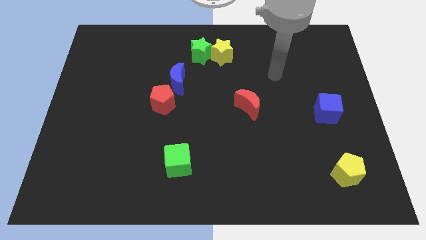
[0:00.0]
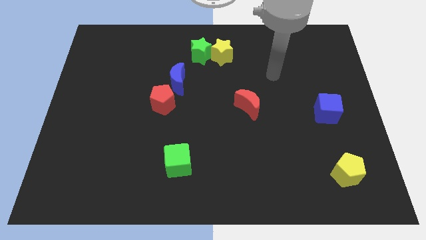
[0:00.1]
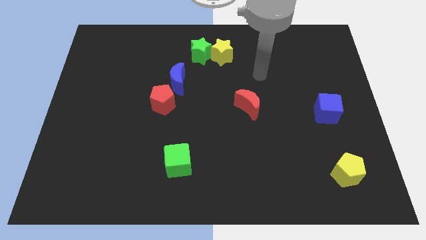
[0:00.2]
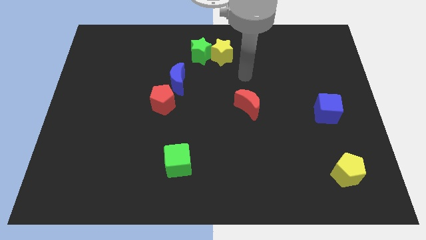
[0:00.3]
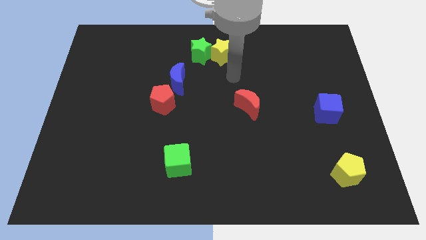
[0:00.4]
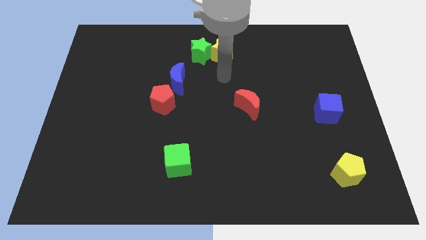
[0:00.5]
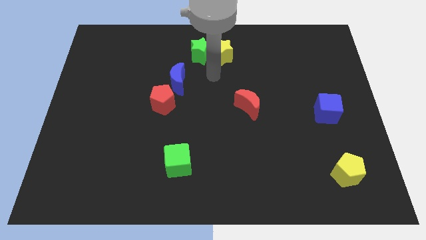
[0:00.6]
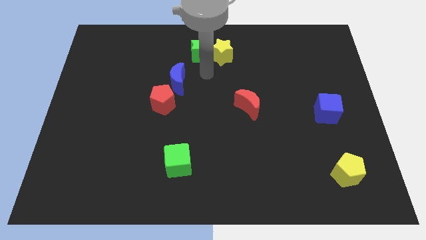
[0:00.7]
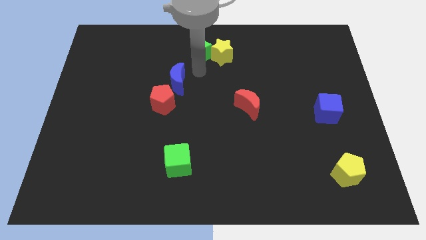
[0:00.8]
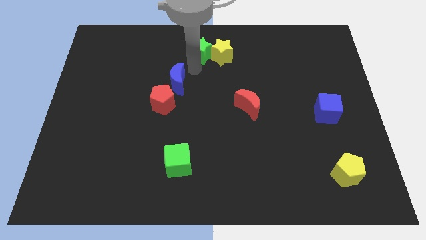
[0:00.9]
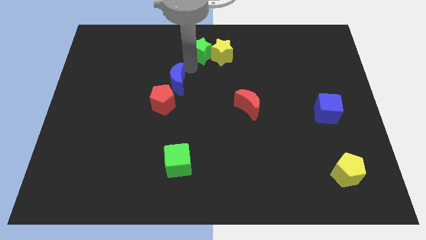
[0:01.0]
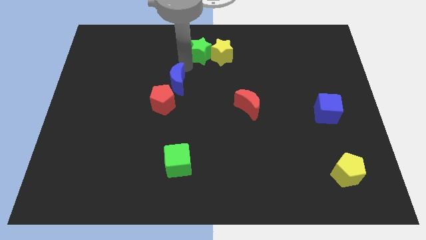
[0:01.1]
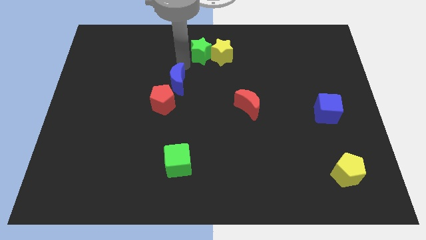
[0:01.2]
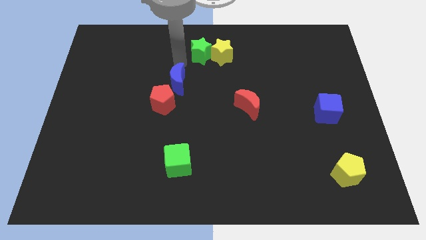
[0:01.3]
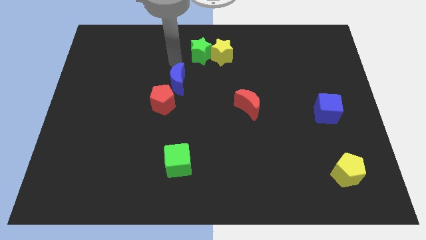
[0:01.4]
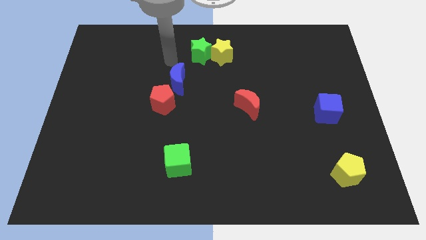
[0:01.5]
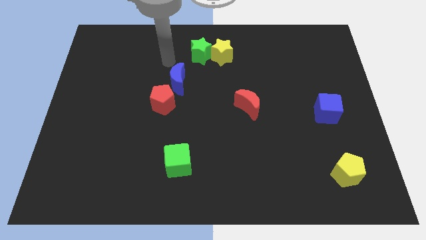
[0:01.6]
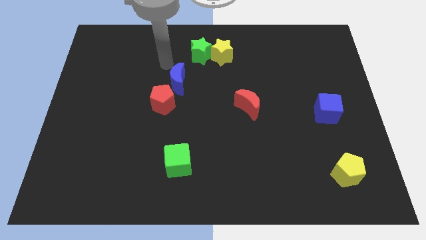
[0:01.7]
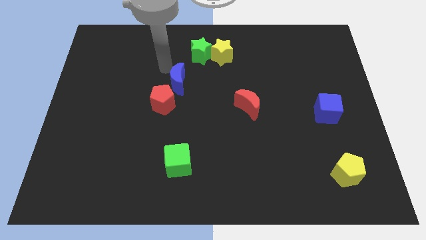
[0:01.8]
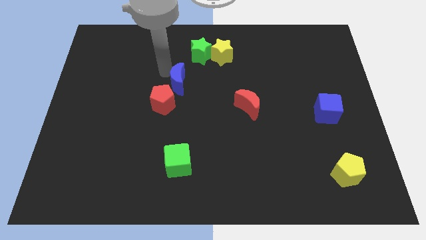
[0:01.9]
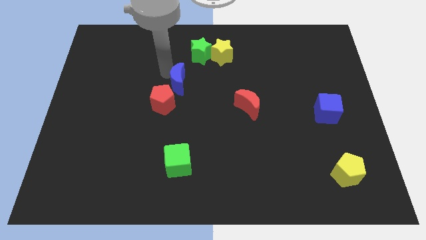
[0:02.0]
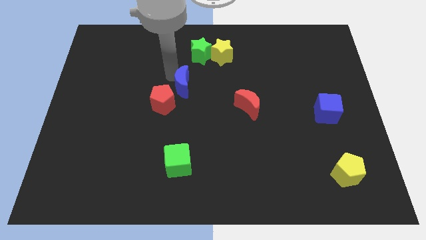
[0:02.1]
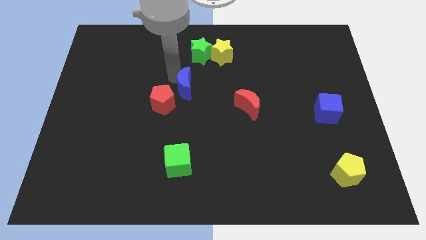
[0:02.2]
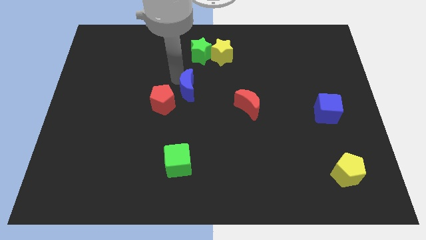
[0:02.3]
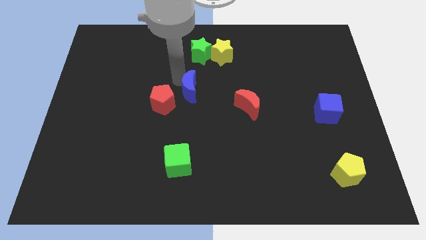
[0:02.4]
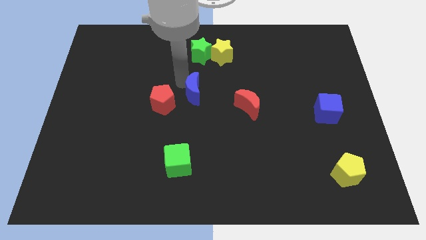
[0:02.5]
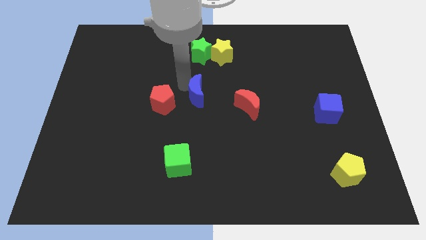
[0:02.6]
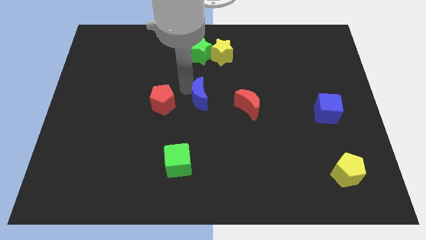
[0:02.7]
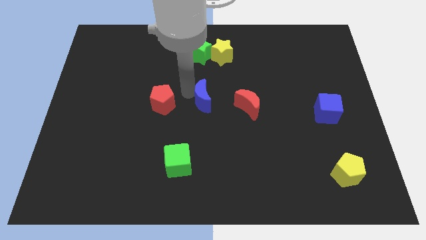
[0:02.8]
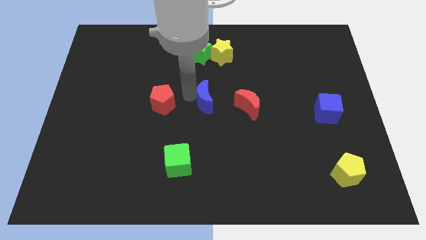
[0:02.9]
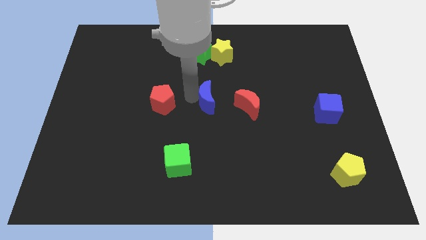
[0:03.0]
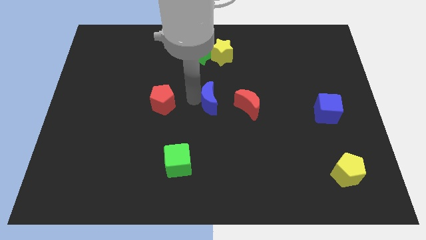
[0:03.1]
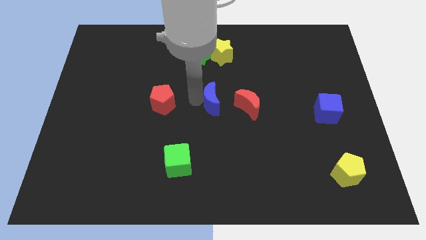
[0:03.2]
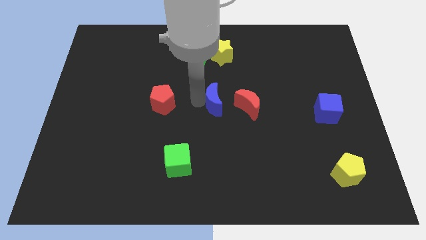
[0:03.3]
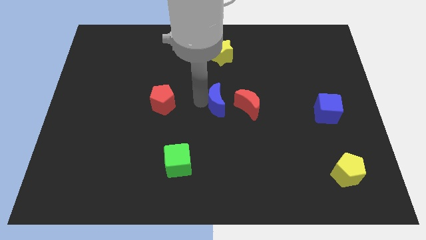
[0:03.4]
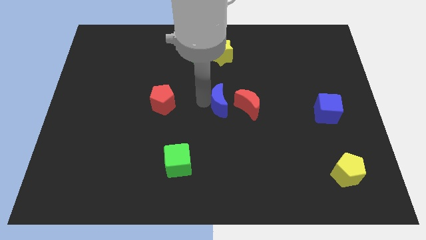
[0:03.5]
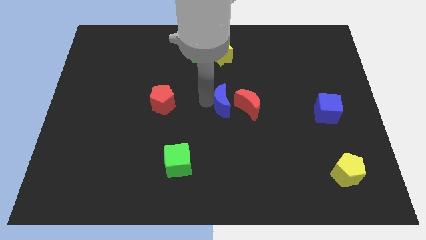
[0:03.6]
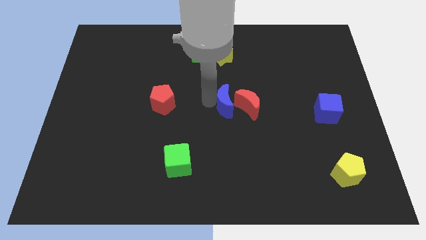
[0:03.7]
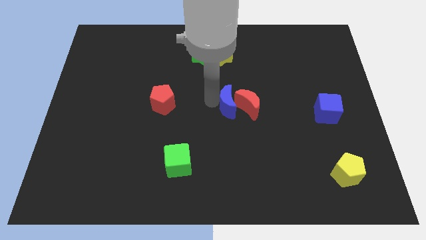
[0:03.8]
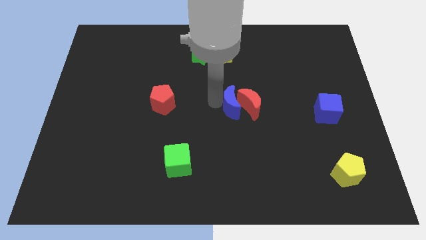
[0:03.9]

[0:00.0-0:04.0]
move the blue moon close to the red moon

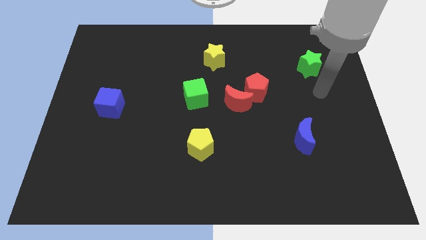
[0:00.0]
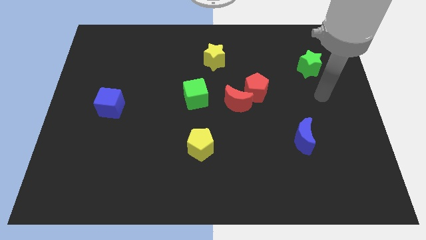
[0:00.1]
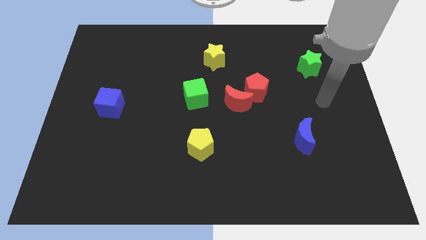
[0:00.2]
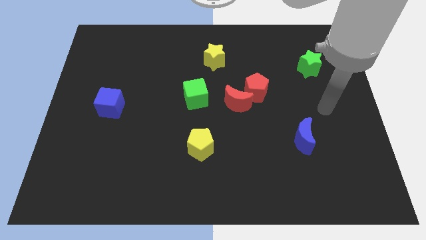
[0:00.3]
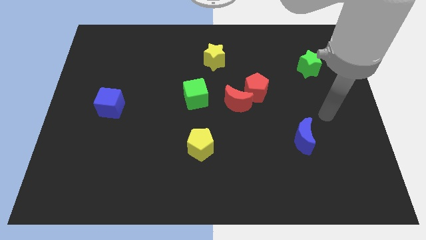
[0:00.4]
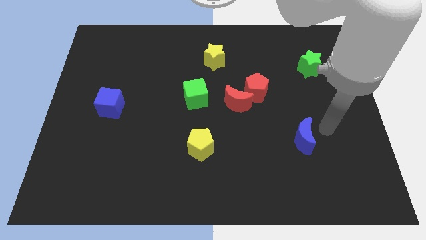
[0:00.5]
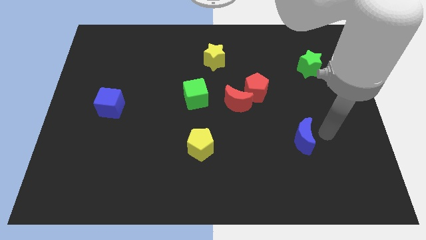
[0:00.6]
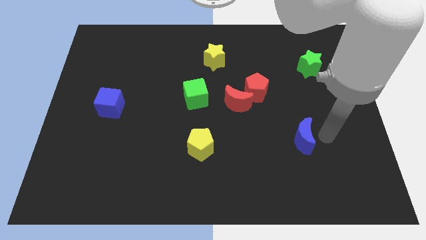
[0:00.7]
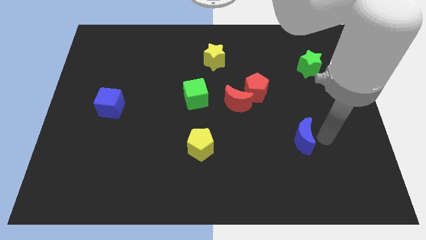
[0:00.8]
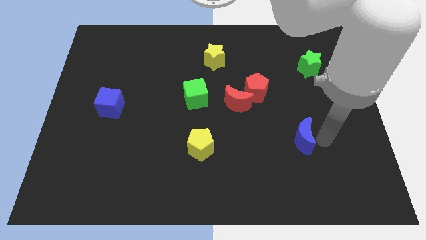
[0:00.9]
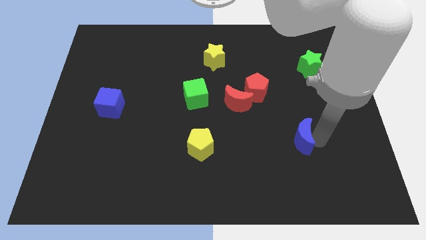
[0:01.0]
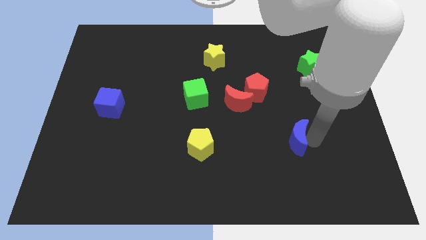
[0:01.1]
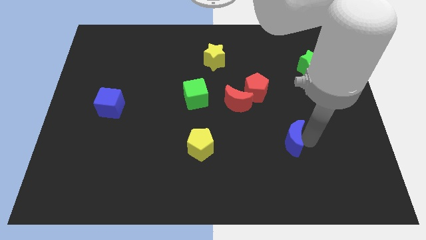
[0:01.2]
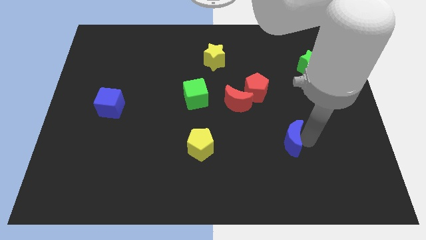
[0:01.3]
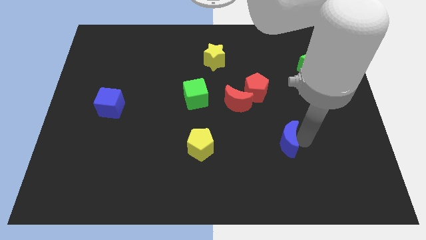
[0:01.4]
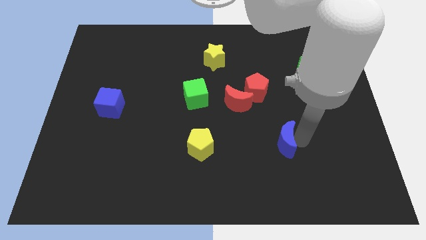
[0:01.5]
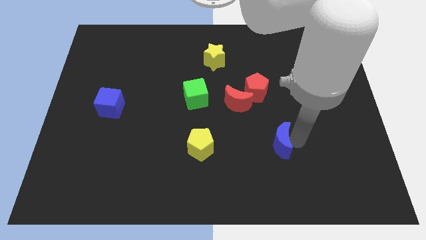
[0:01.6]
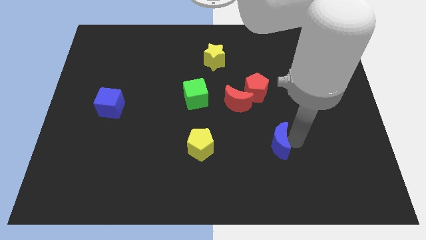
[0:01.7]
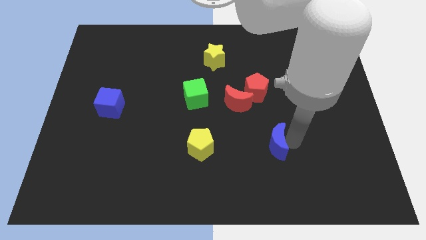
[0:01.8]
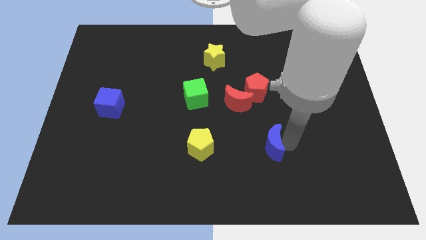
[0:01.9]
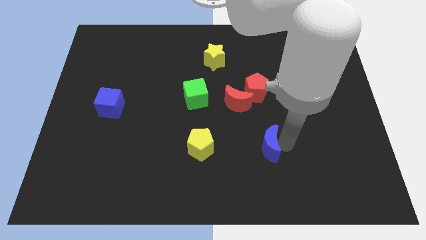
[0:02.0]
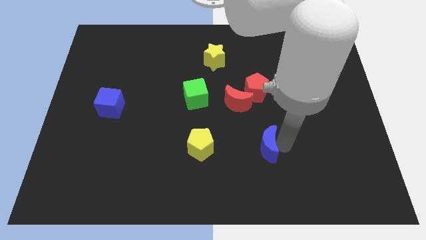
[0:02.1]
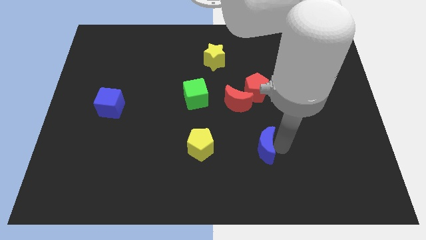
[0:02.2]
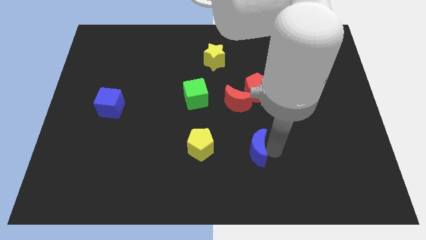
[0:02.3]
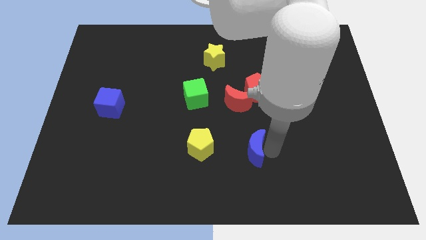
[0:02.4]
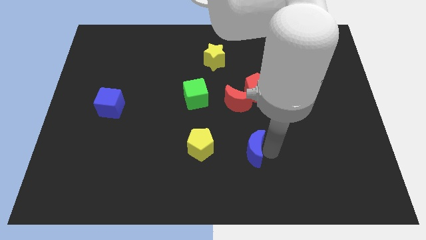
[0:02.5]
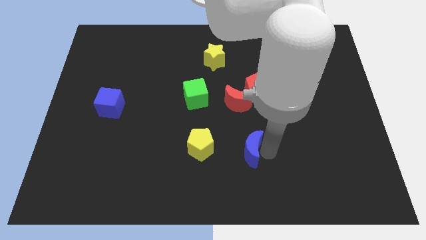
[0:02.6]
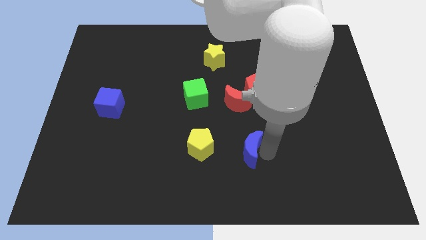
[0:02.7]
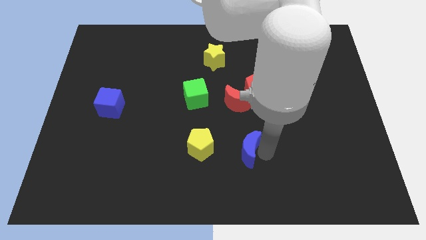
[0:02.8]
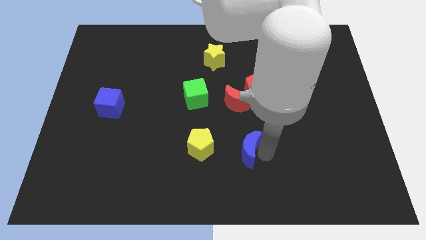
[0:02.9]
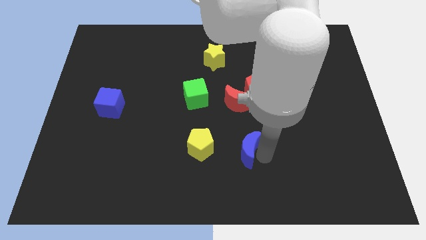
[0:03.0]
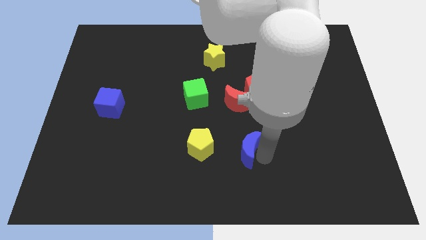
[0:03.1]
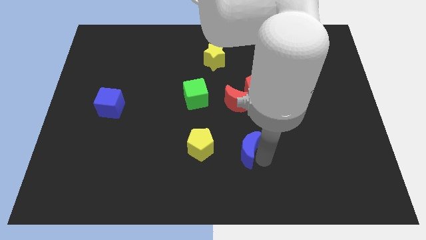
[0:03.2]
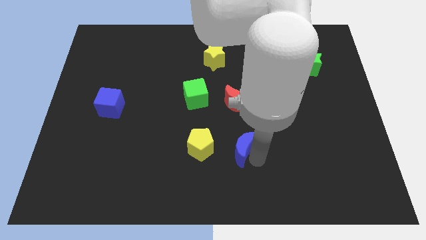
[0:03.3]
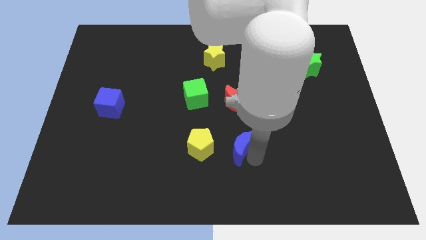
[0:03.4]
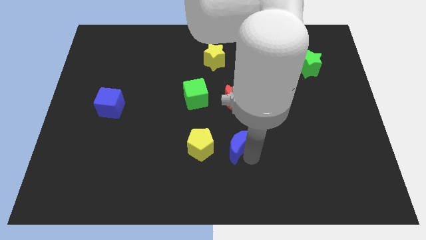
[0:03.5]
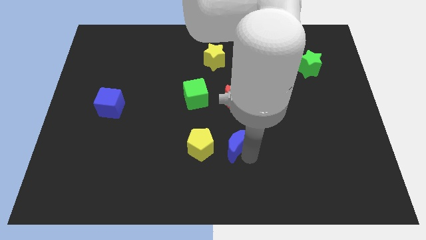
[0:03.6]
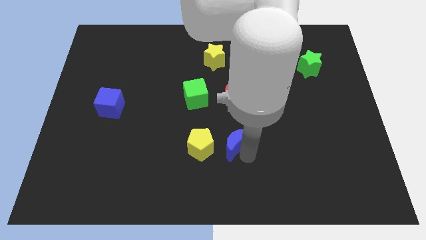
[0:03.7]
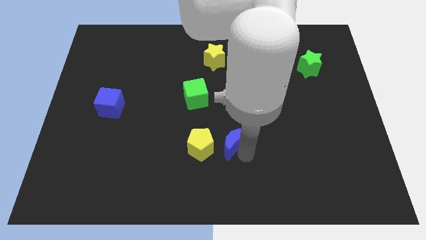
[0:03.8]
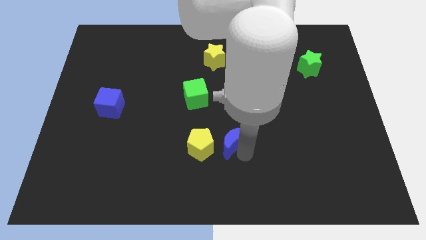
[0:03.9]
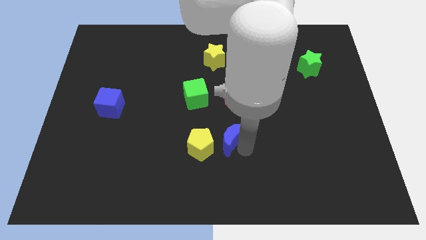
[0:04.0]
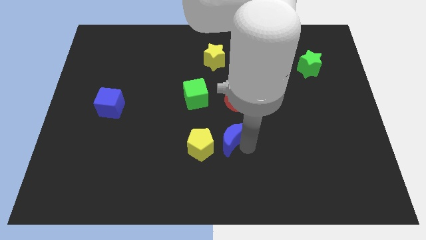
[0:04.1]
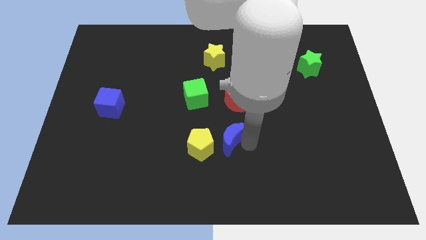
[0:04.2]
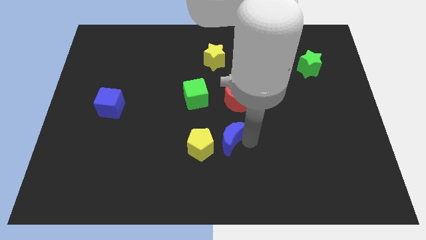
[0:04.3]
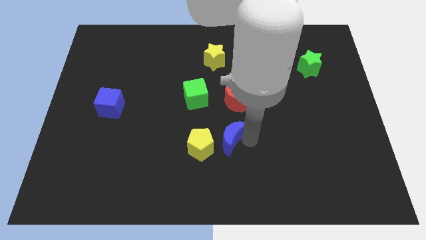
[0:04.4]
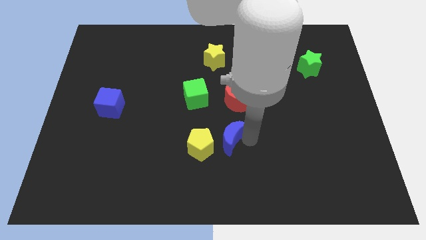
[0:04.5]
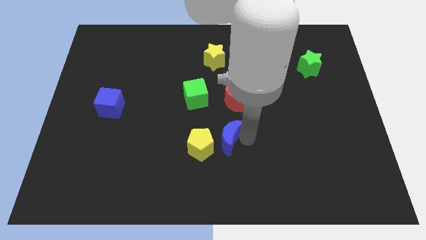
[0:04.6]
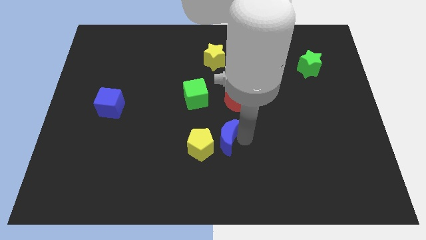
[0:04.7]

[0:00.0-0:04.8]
put the blue moon next to the yellow pentagon
